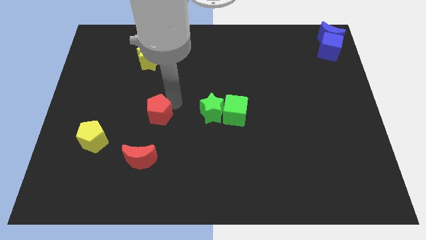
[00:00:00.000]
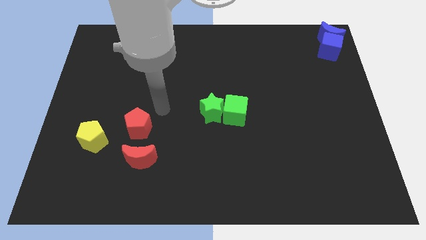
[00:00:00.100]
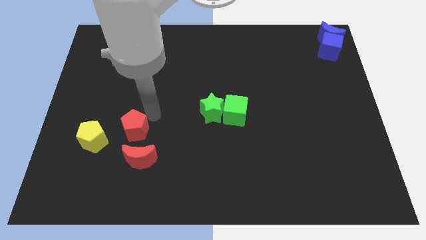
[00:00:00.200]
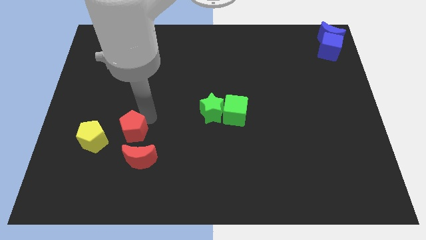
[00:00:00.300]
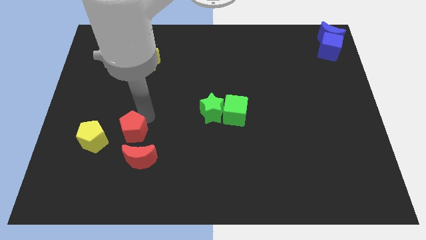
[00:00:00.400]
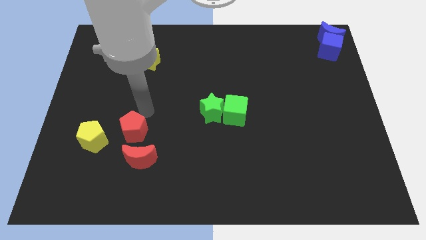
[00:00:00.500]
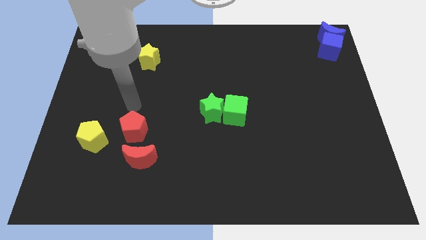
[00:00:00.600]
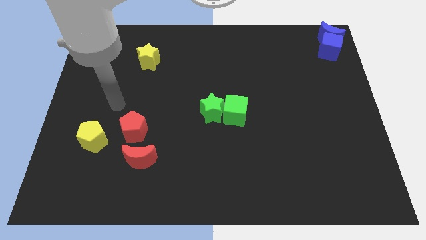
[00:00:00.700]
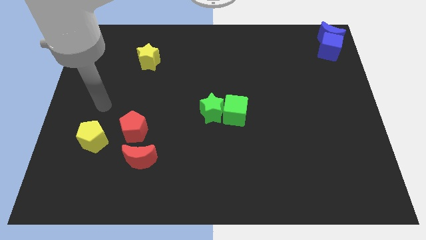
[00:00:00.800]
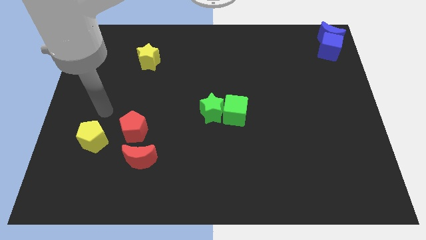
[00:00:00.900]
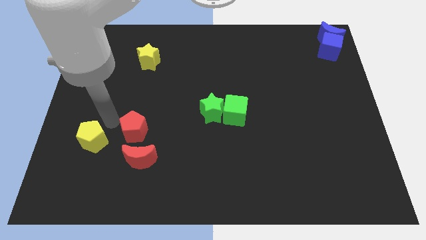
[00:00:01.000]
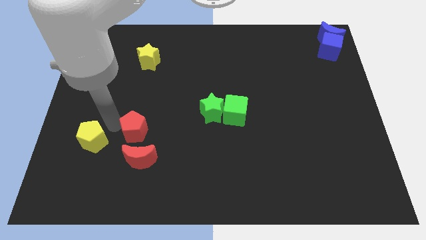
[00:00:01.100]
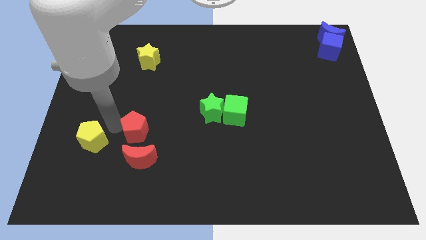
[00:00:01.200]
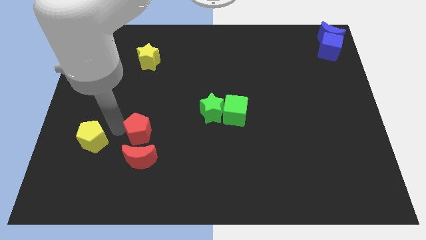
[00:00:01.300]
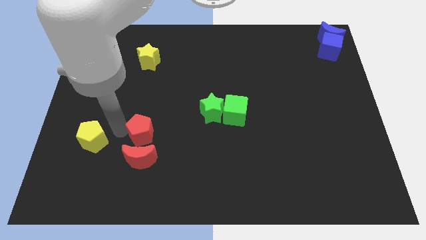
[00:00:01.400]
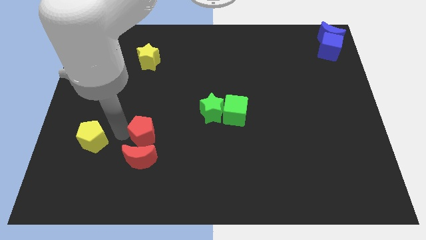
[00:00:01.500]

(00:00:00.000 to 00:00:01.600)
move the red pentagon to the top side of the red crescent

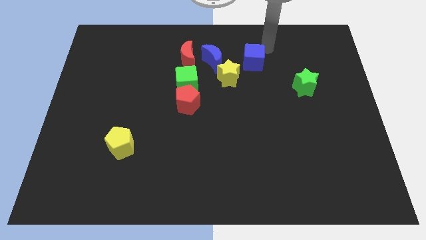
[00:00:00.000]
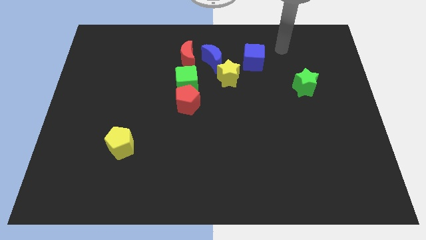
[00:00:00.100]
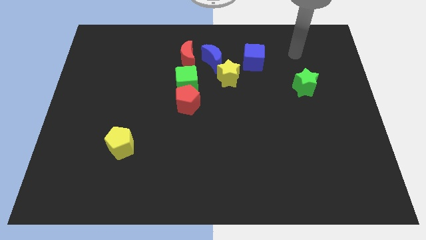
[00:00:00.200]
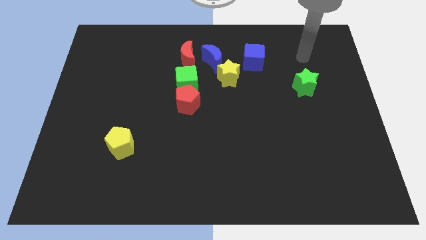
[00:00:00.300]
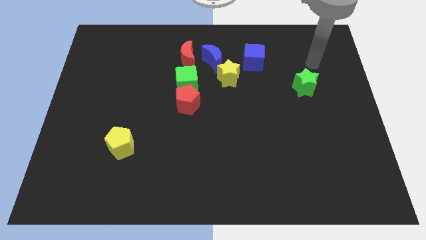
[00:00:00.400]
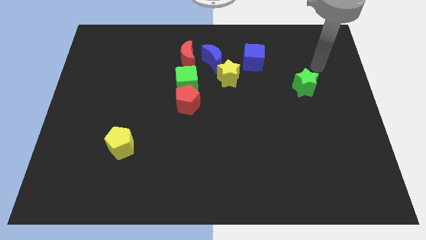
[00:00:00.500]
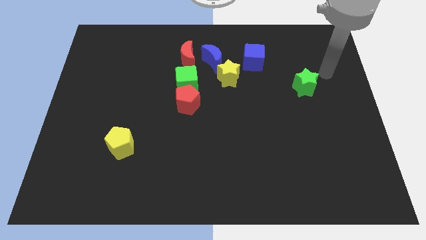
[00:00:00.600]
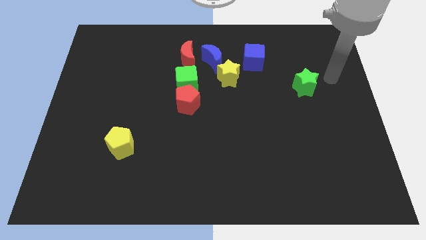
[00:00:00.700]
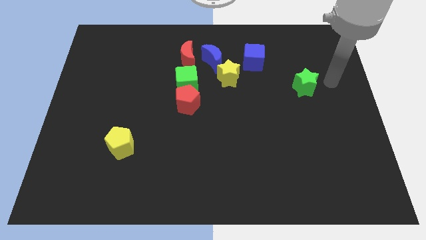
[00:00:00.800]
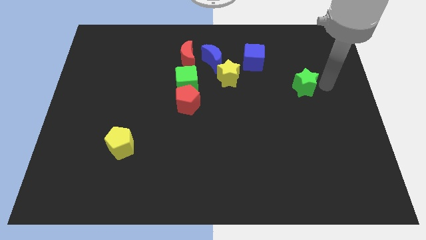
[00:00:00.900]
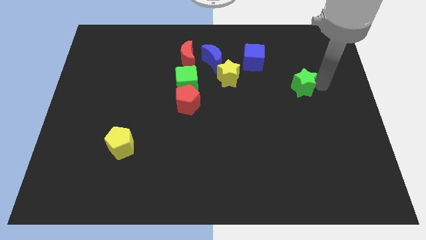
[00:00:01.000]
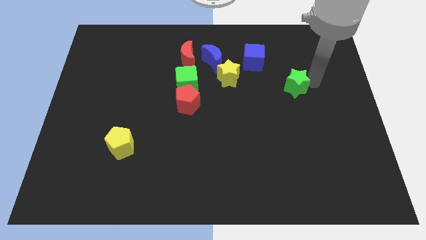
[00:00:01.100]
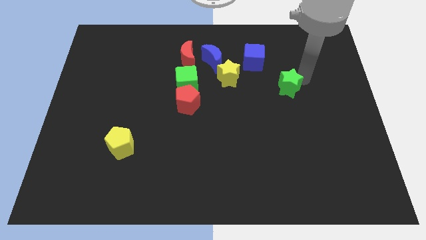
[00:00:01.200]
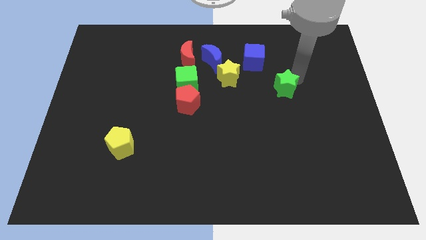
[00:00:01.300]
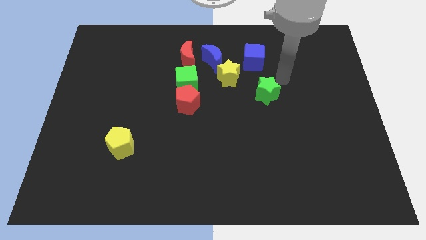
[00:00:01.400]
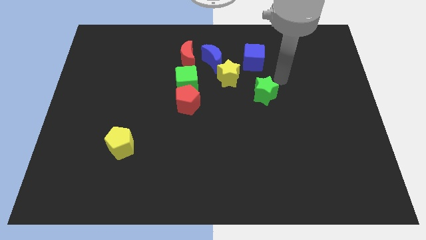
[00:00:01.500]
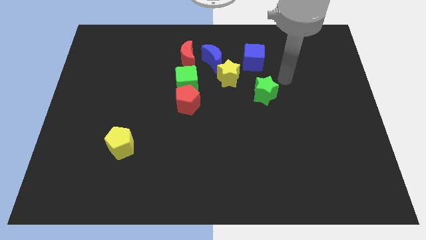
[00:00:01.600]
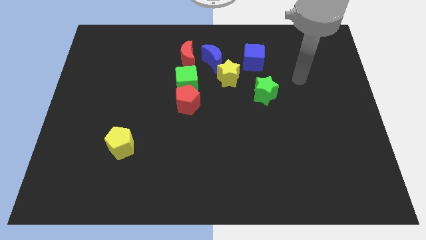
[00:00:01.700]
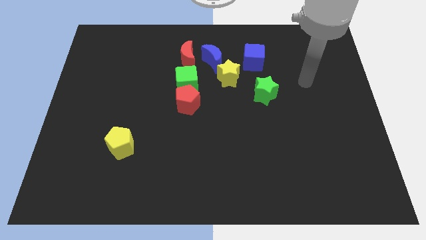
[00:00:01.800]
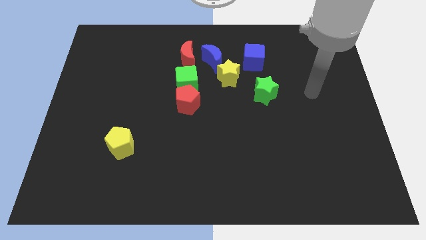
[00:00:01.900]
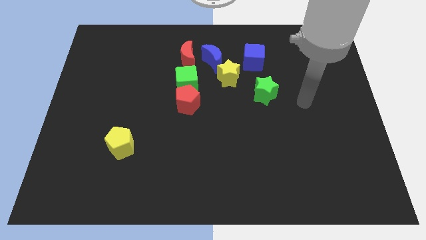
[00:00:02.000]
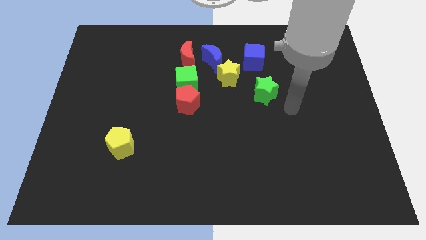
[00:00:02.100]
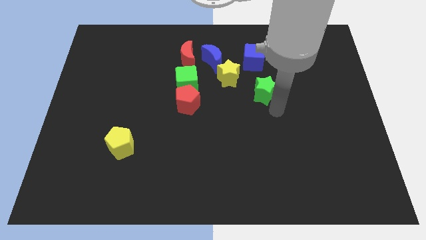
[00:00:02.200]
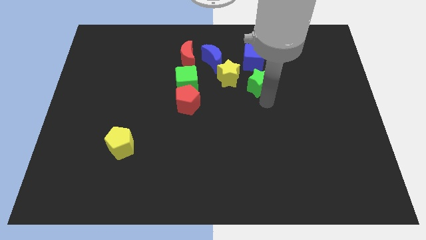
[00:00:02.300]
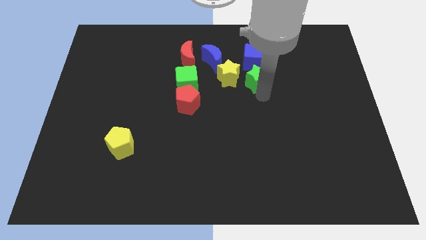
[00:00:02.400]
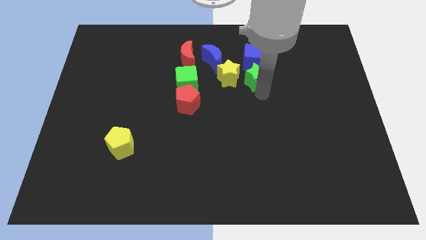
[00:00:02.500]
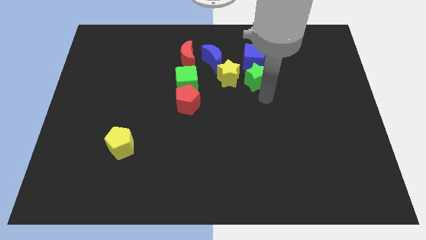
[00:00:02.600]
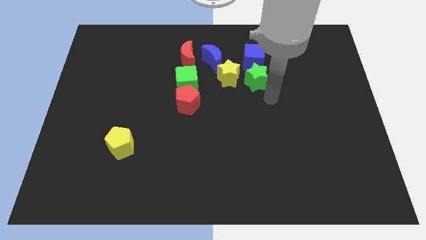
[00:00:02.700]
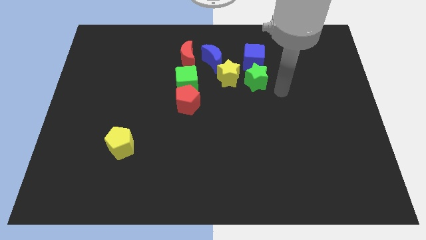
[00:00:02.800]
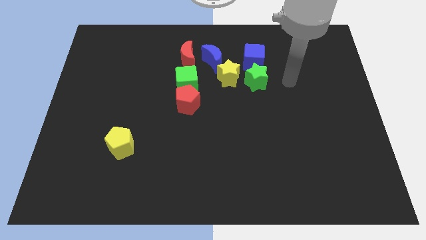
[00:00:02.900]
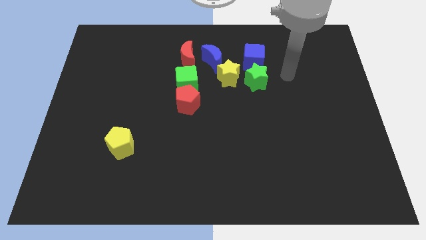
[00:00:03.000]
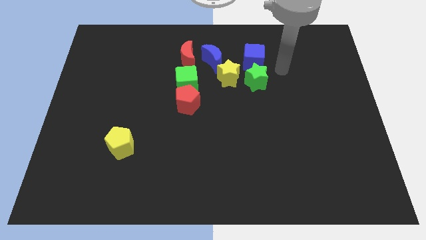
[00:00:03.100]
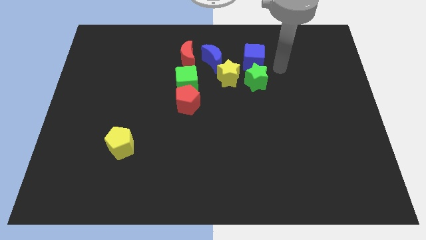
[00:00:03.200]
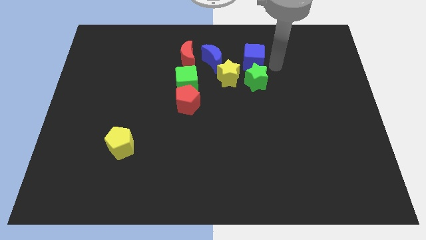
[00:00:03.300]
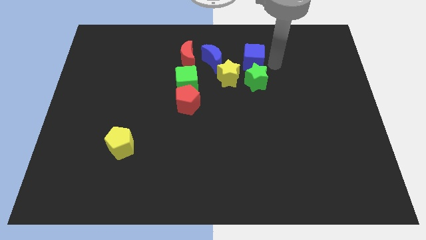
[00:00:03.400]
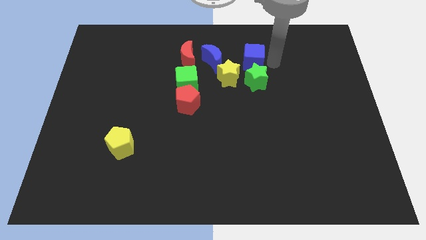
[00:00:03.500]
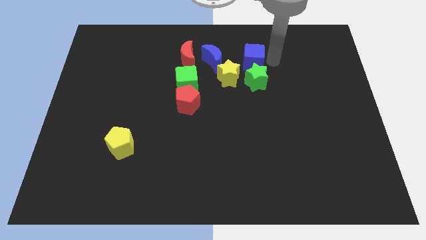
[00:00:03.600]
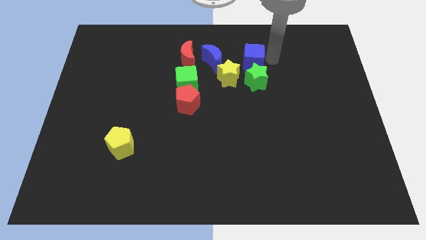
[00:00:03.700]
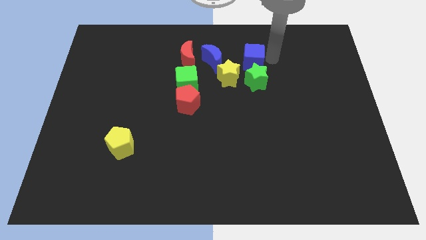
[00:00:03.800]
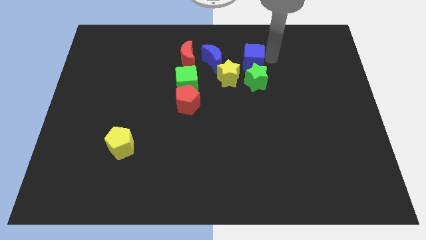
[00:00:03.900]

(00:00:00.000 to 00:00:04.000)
push the green star towards the yellow star

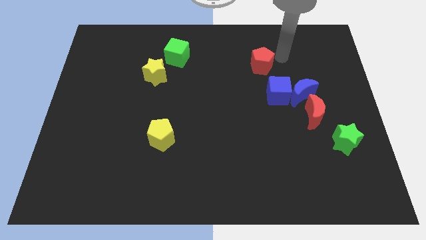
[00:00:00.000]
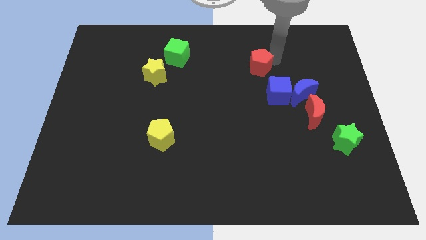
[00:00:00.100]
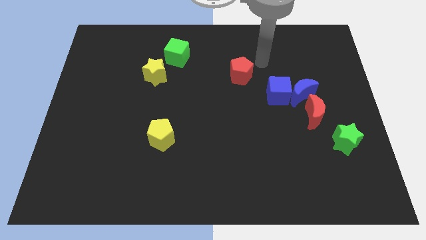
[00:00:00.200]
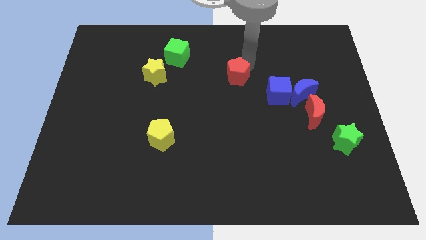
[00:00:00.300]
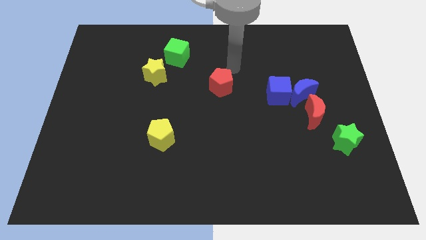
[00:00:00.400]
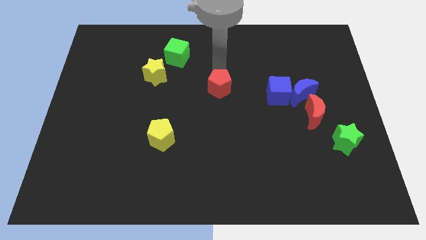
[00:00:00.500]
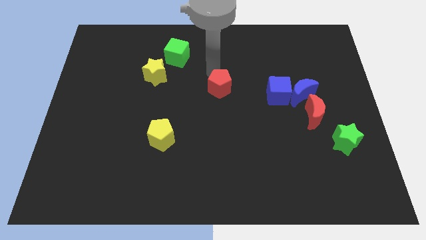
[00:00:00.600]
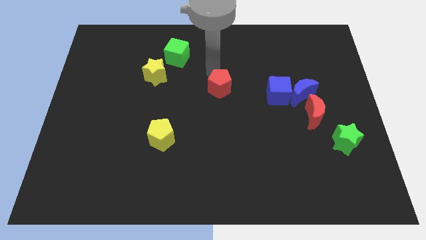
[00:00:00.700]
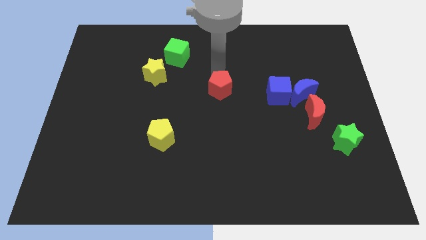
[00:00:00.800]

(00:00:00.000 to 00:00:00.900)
place the red pentagon diagonal to the left side of the blue cube

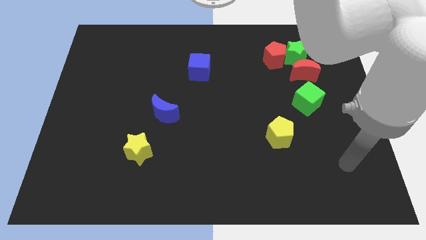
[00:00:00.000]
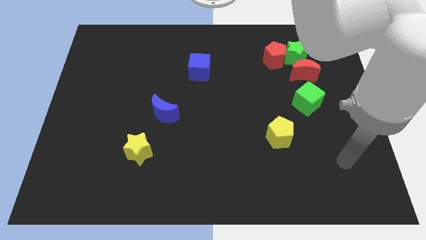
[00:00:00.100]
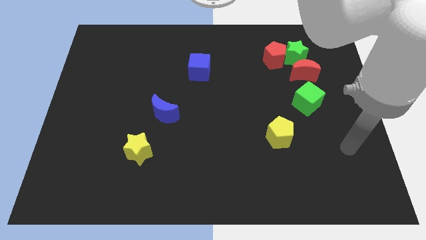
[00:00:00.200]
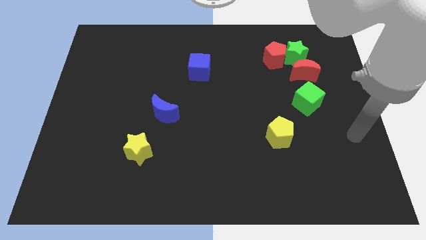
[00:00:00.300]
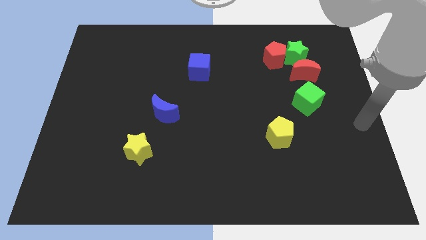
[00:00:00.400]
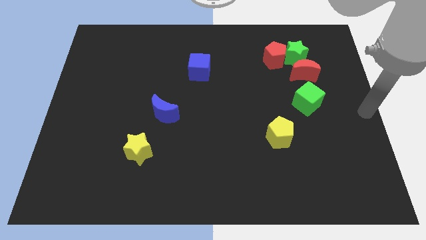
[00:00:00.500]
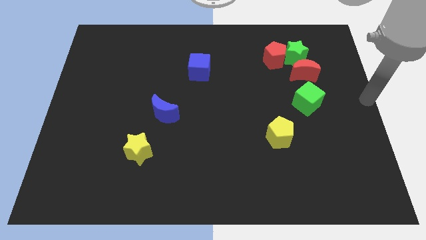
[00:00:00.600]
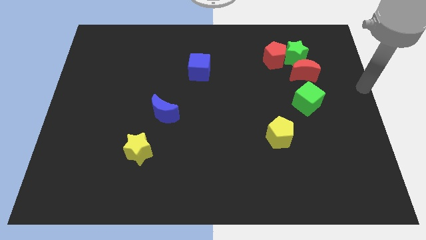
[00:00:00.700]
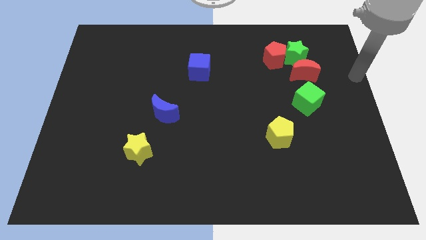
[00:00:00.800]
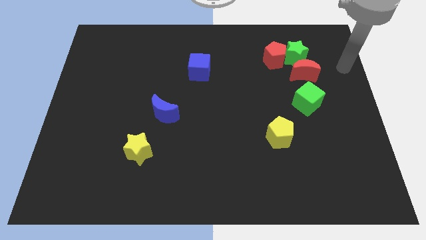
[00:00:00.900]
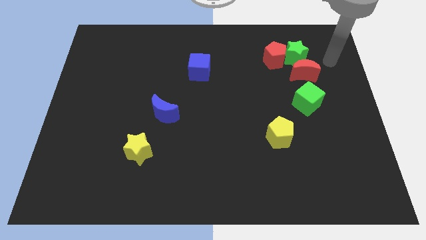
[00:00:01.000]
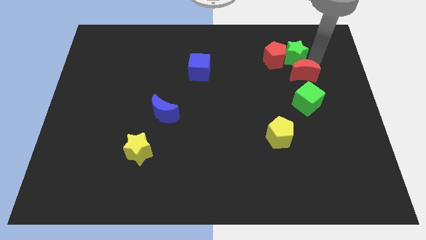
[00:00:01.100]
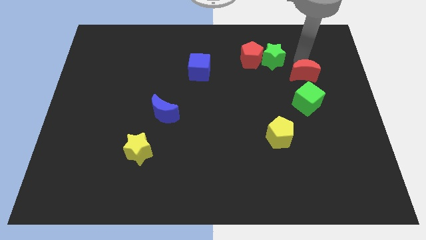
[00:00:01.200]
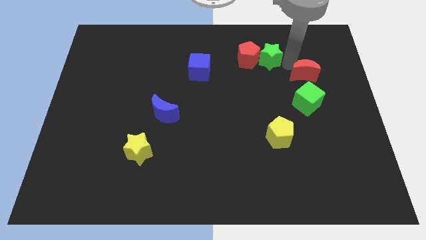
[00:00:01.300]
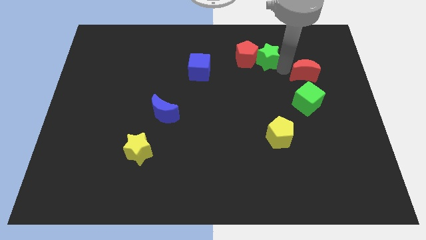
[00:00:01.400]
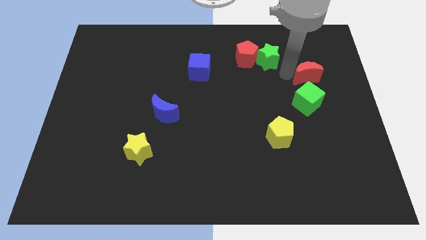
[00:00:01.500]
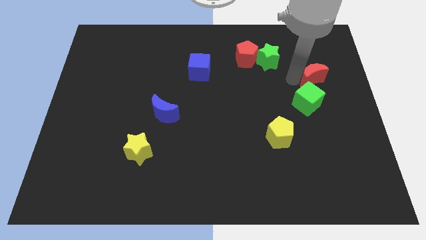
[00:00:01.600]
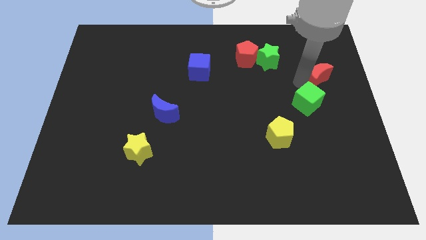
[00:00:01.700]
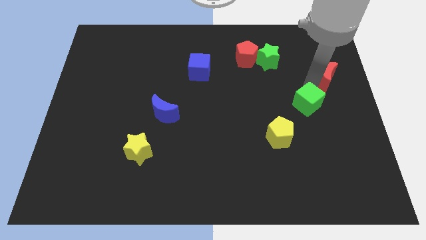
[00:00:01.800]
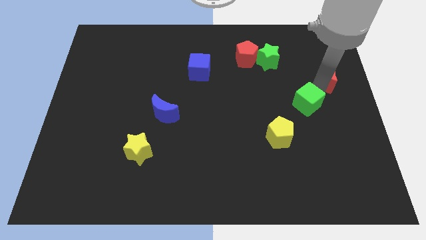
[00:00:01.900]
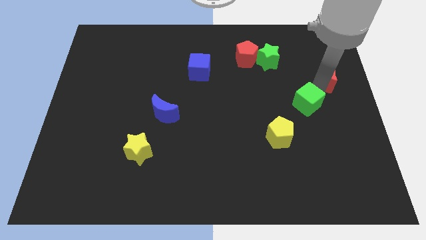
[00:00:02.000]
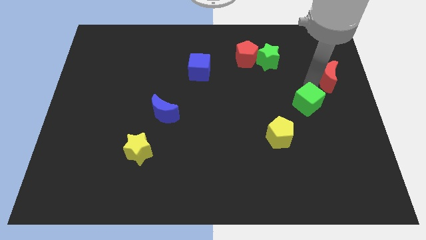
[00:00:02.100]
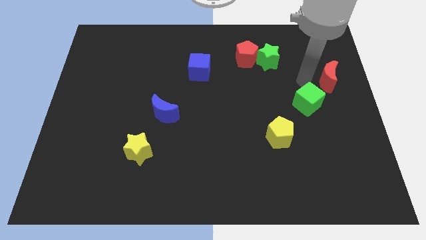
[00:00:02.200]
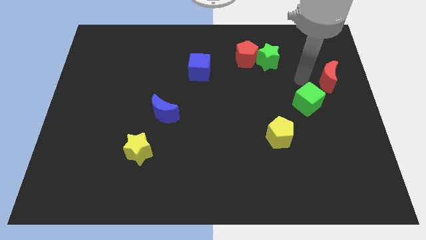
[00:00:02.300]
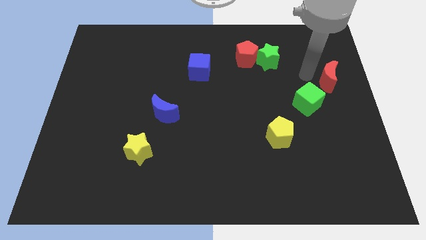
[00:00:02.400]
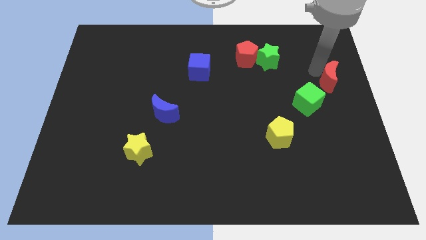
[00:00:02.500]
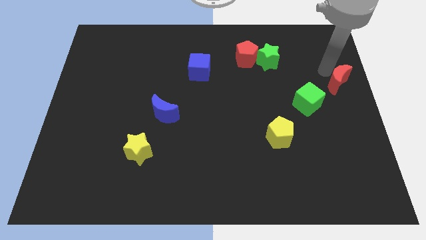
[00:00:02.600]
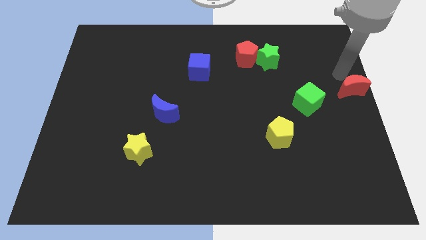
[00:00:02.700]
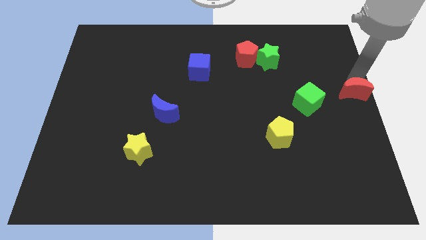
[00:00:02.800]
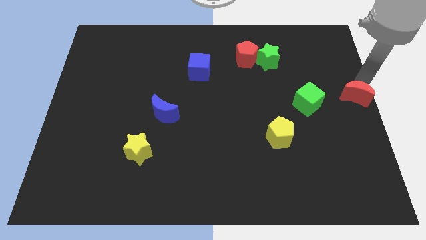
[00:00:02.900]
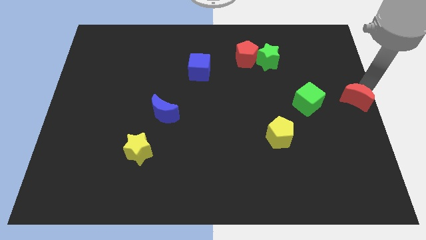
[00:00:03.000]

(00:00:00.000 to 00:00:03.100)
place the red moon towards the center right corner of the board
